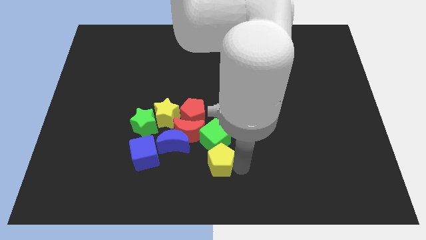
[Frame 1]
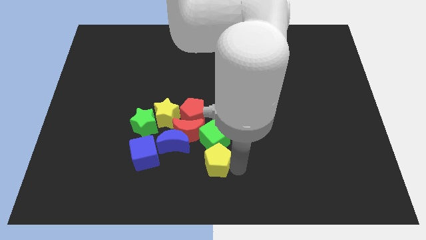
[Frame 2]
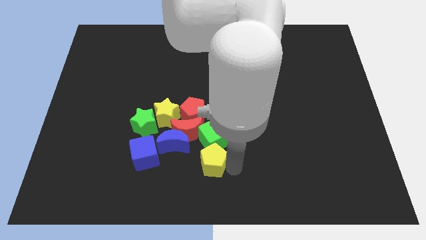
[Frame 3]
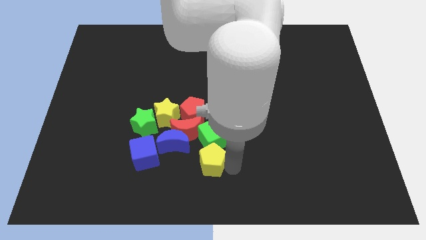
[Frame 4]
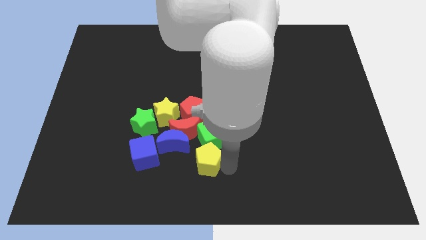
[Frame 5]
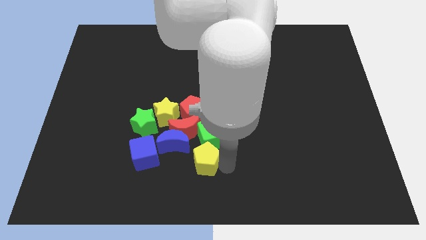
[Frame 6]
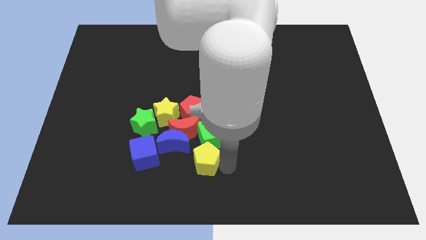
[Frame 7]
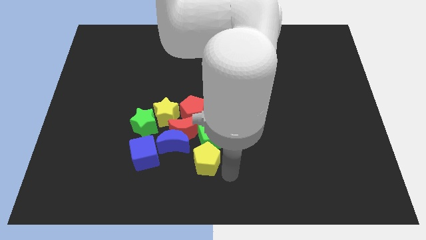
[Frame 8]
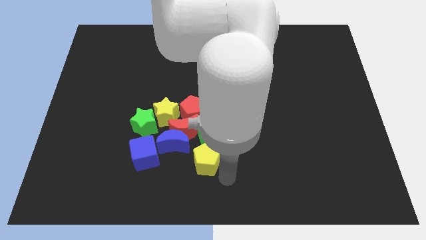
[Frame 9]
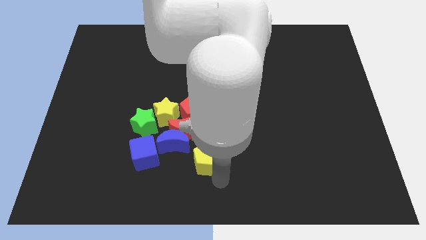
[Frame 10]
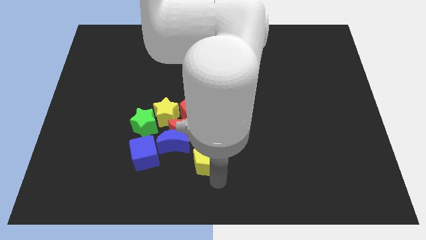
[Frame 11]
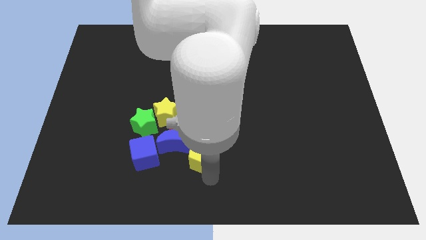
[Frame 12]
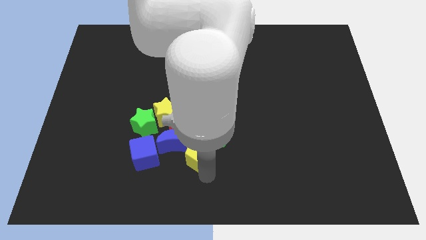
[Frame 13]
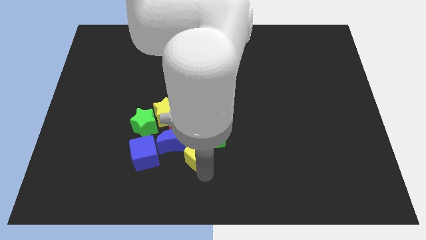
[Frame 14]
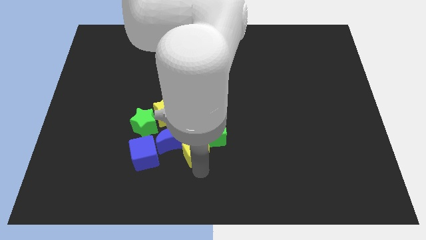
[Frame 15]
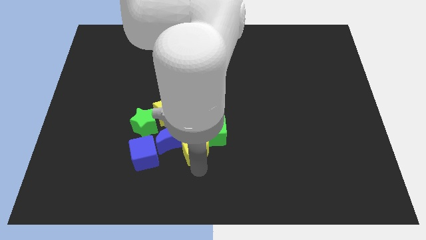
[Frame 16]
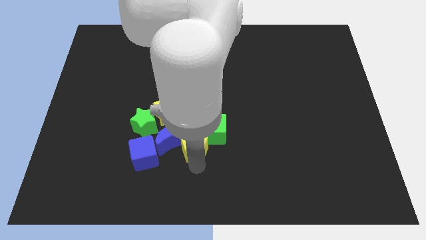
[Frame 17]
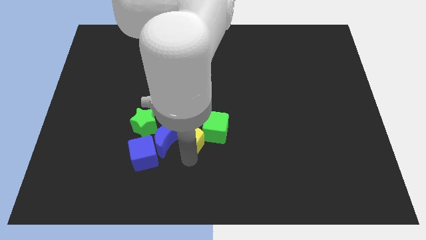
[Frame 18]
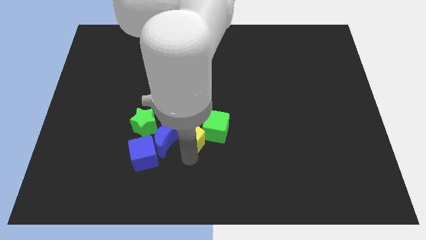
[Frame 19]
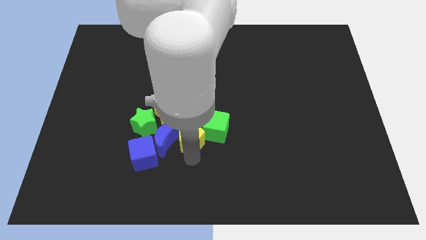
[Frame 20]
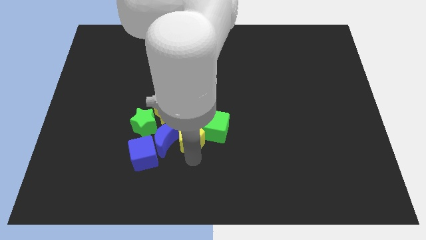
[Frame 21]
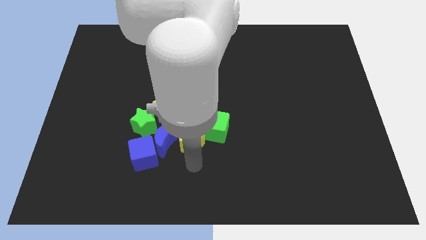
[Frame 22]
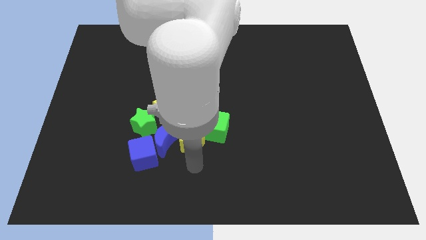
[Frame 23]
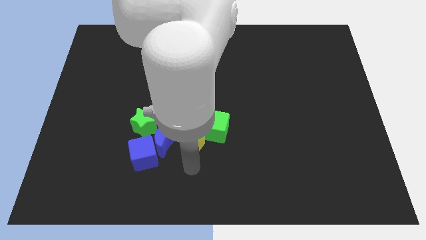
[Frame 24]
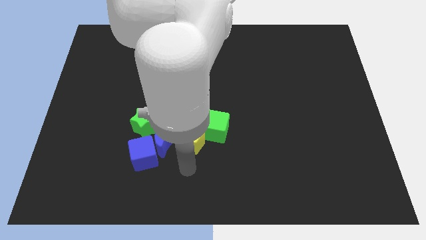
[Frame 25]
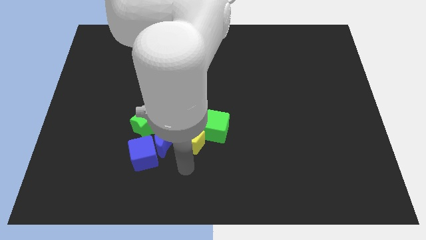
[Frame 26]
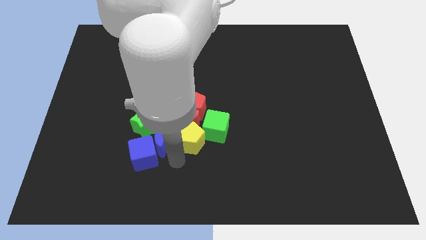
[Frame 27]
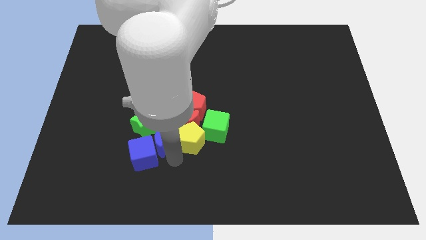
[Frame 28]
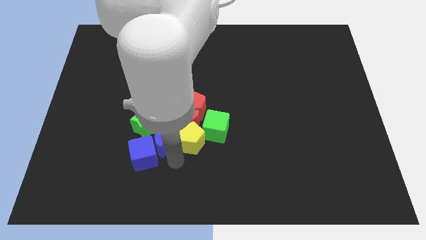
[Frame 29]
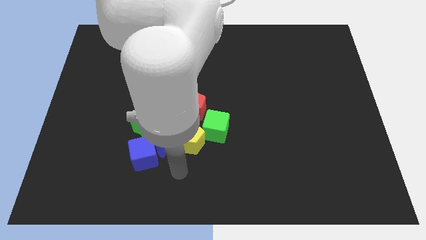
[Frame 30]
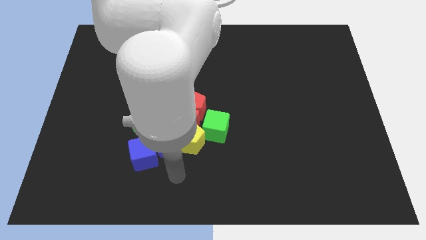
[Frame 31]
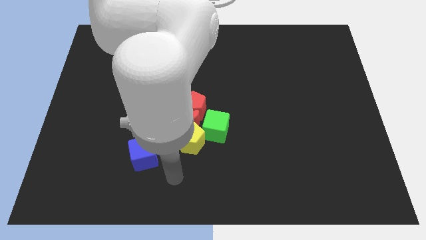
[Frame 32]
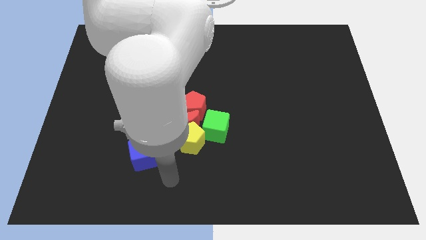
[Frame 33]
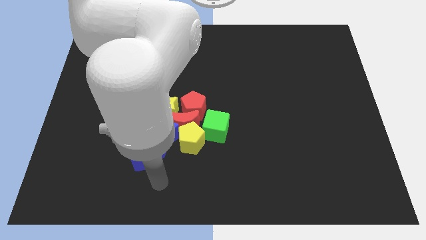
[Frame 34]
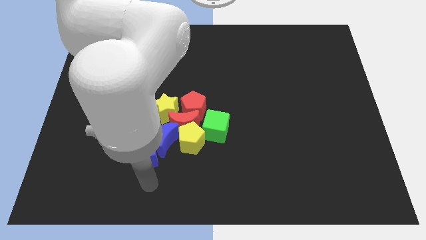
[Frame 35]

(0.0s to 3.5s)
move the yellow pentagon into the blue moon and the green cube

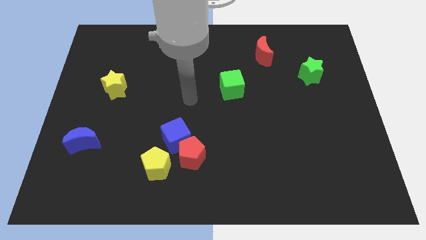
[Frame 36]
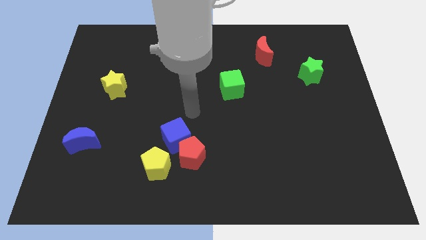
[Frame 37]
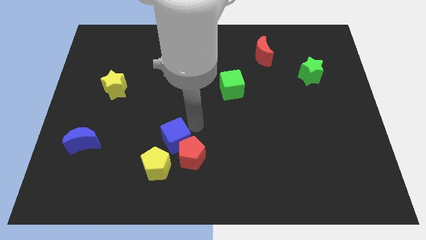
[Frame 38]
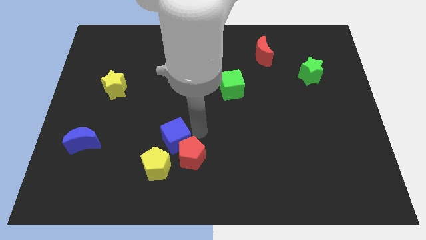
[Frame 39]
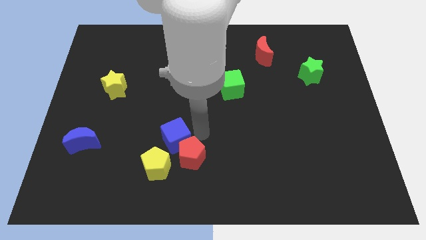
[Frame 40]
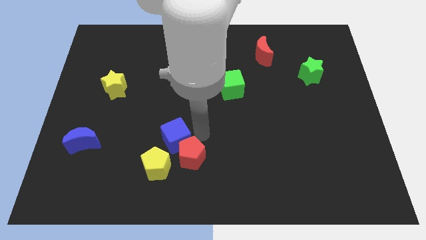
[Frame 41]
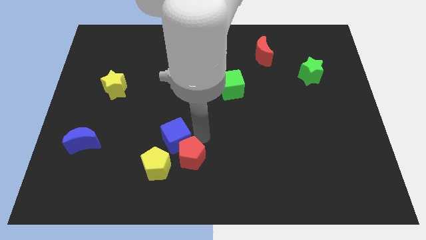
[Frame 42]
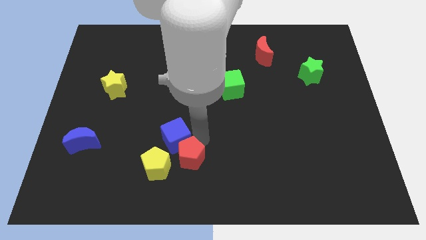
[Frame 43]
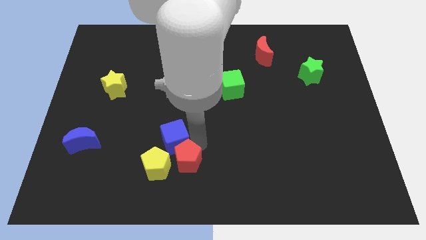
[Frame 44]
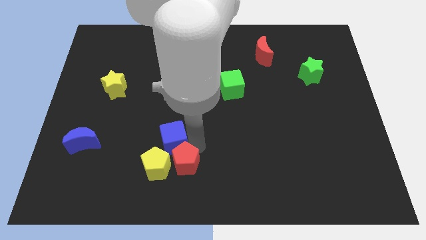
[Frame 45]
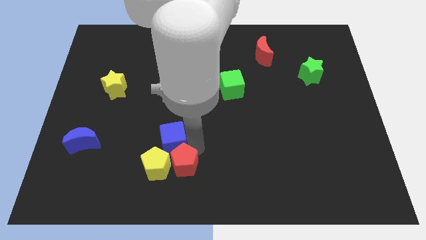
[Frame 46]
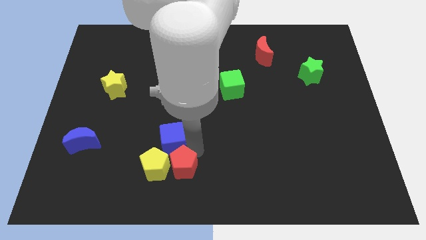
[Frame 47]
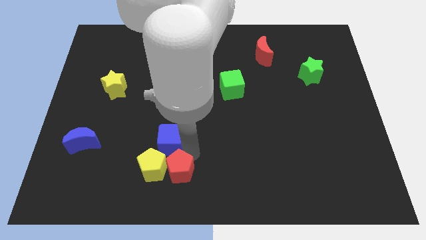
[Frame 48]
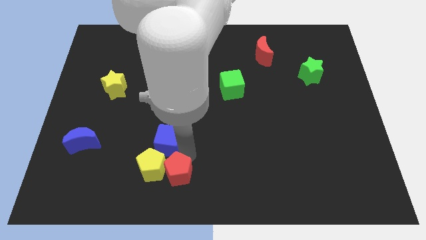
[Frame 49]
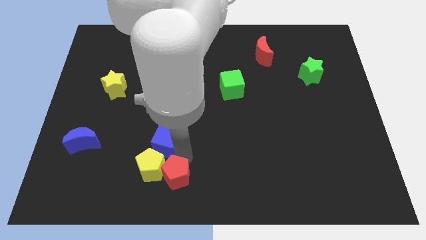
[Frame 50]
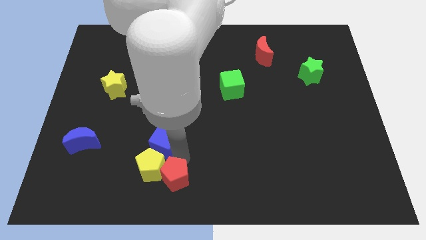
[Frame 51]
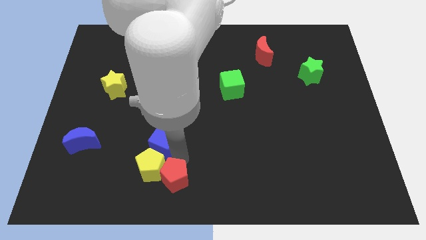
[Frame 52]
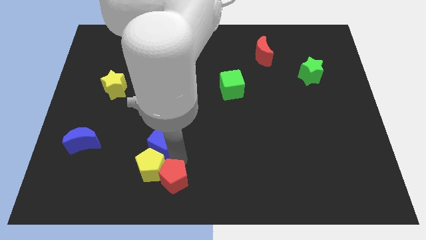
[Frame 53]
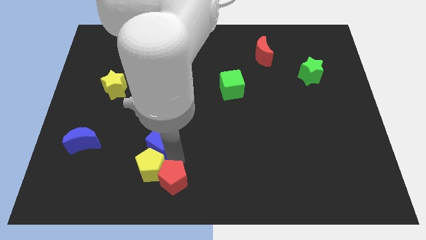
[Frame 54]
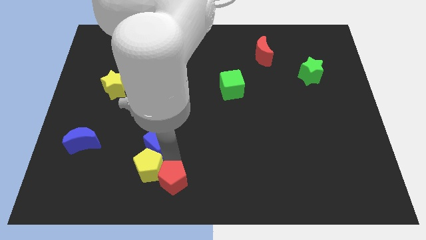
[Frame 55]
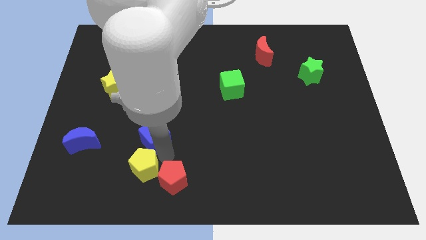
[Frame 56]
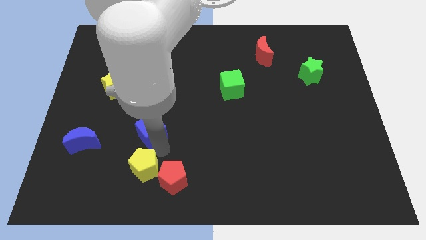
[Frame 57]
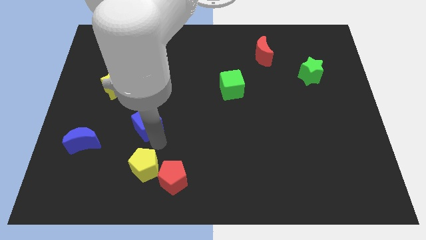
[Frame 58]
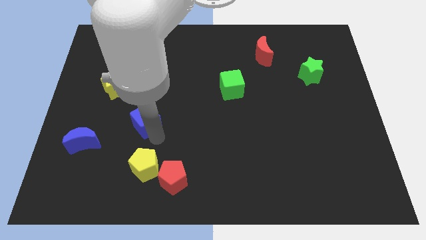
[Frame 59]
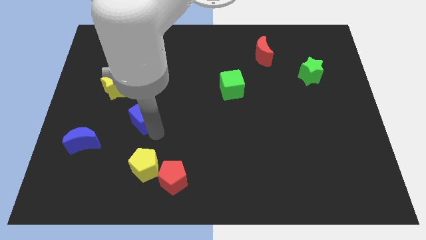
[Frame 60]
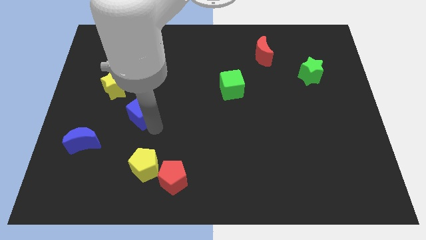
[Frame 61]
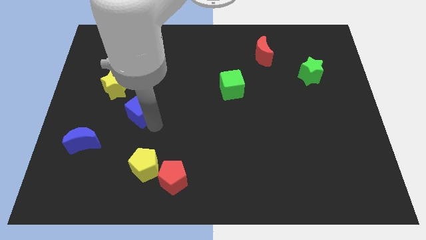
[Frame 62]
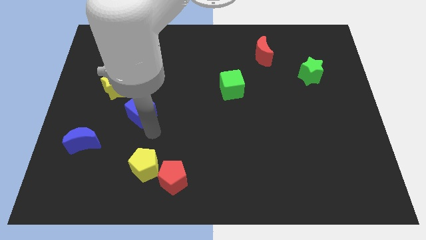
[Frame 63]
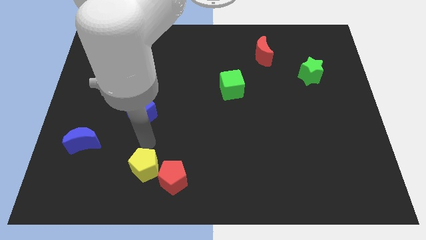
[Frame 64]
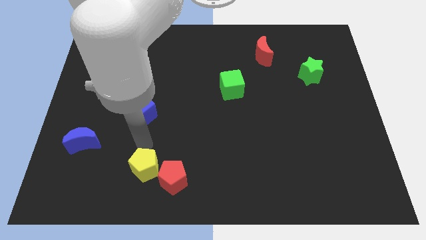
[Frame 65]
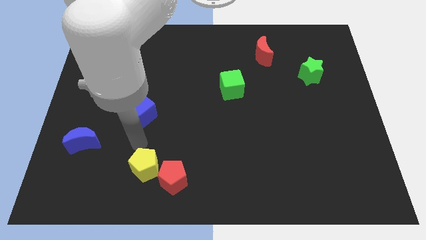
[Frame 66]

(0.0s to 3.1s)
place the blue cube below the yellow star

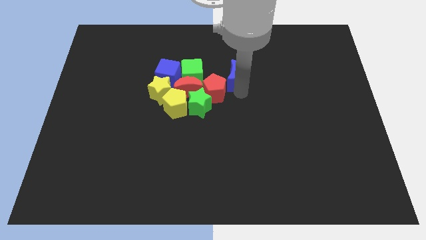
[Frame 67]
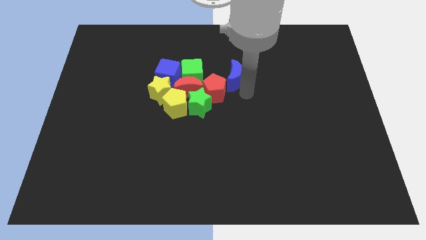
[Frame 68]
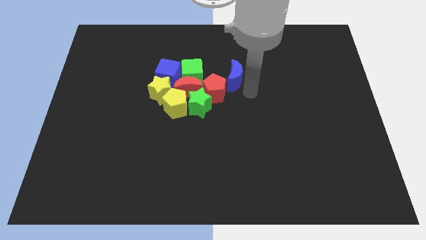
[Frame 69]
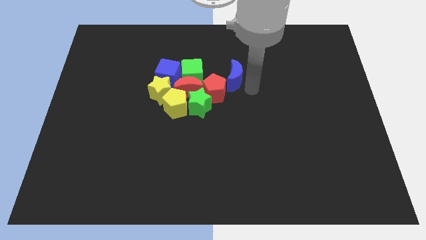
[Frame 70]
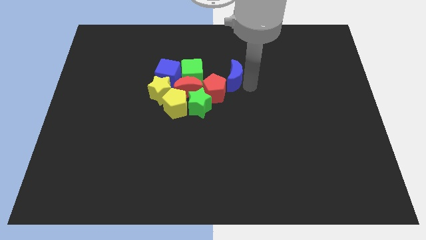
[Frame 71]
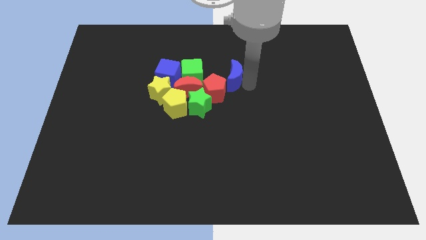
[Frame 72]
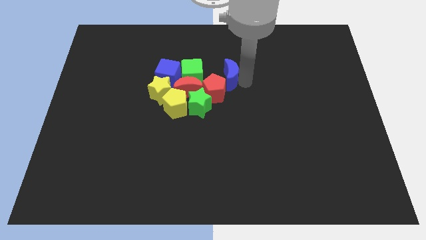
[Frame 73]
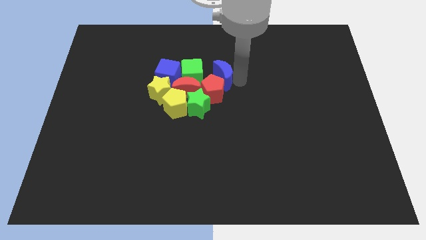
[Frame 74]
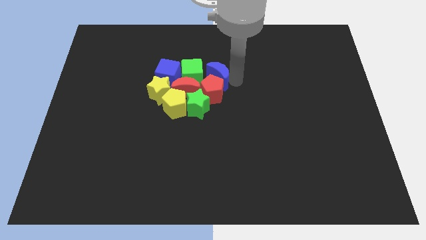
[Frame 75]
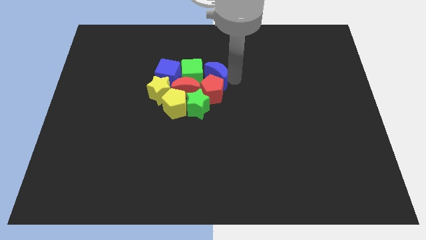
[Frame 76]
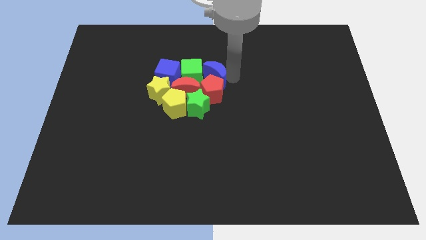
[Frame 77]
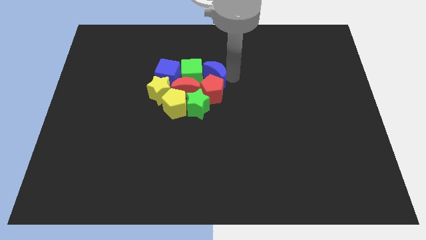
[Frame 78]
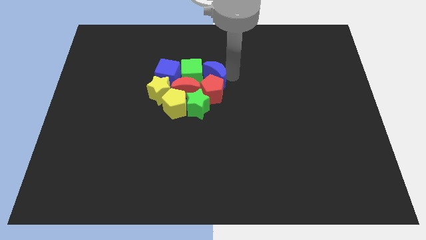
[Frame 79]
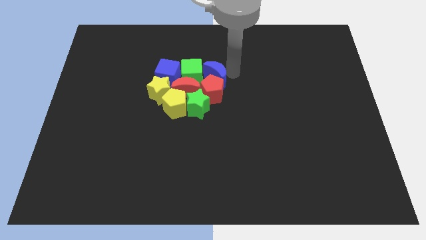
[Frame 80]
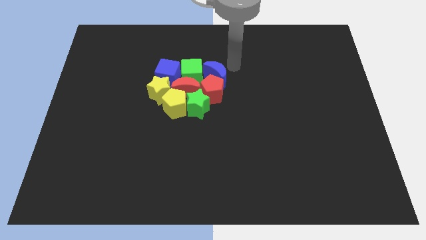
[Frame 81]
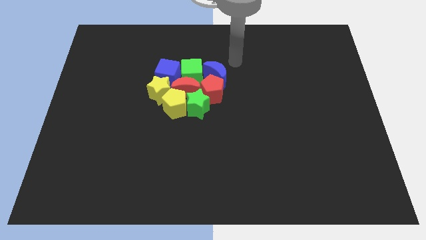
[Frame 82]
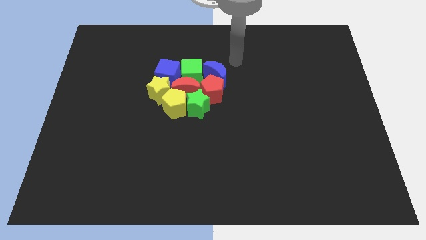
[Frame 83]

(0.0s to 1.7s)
move the blue crescent to the right of the green cube

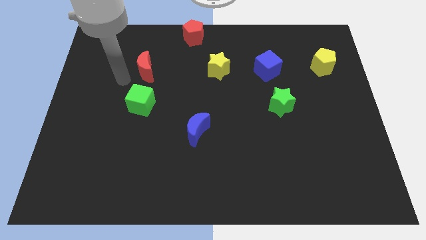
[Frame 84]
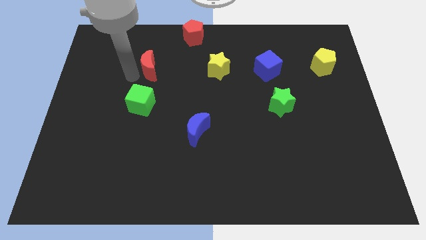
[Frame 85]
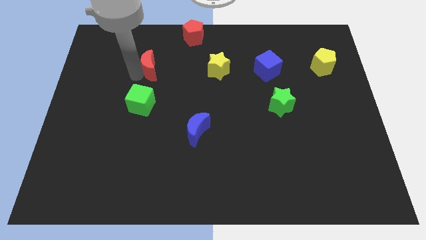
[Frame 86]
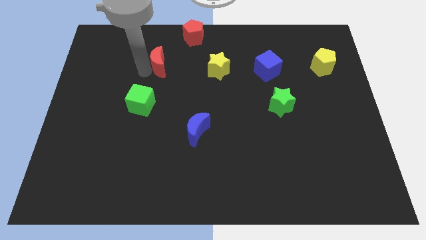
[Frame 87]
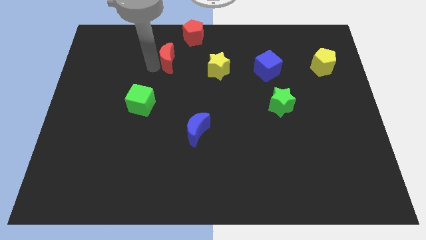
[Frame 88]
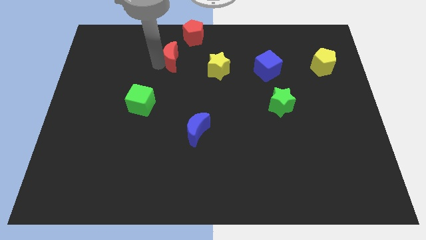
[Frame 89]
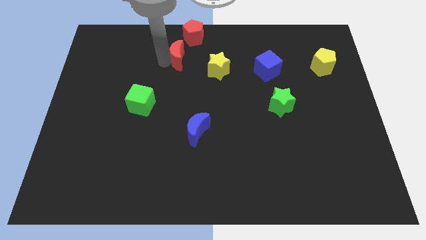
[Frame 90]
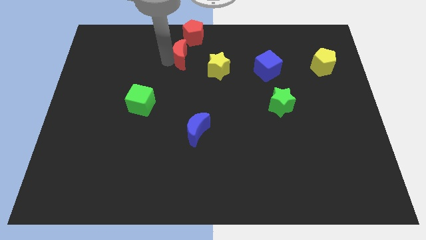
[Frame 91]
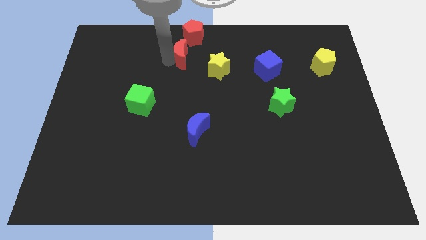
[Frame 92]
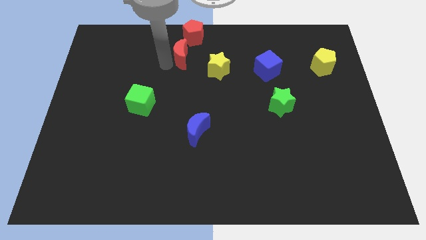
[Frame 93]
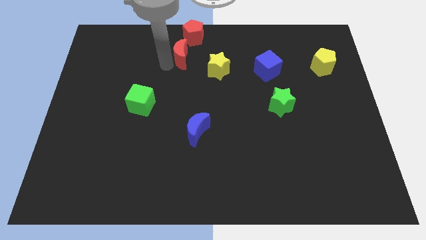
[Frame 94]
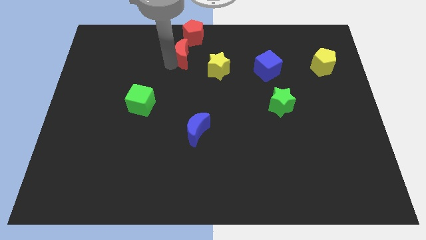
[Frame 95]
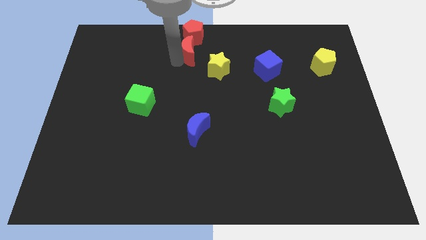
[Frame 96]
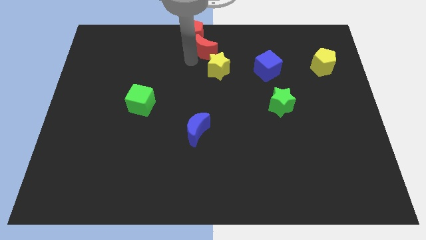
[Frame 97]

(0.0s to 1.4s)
place the red moon to the bottom of red pentagon
